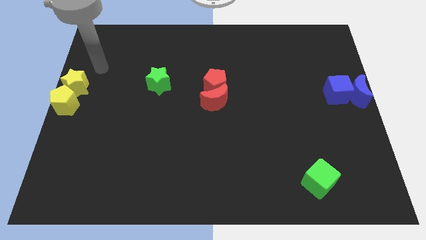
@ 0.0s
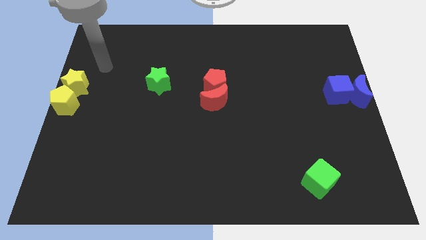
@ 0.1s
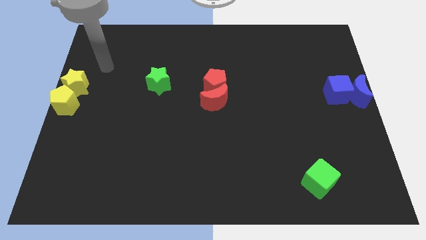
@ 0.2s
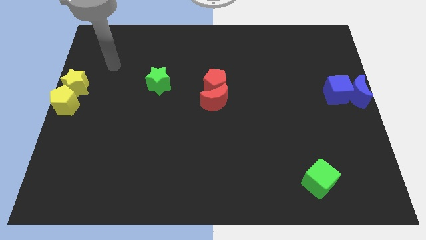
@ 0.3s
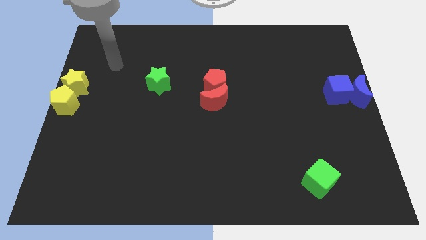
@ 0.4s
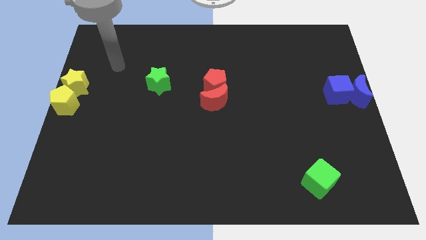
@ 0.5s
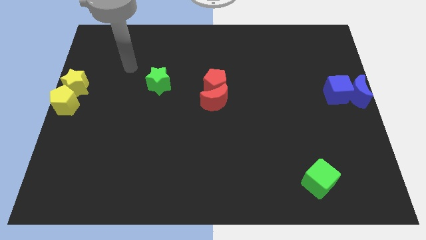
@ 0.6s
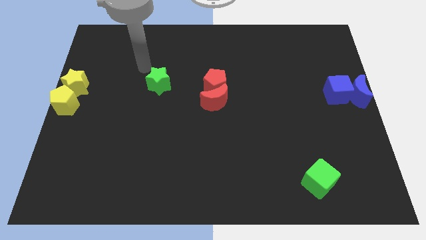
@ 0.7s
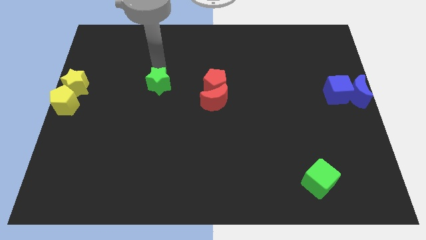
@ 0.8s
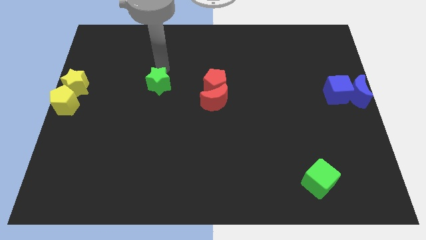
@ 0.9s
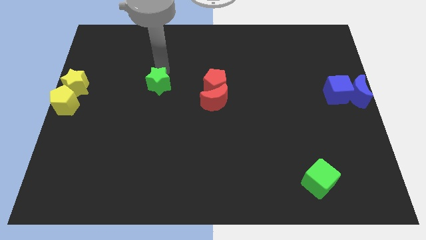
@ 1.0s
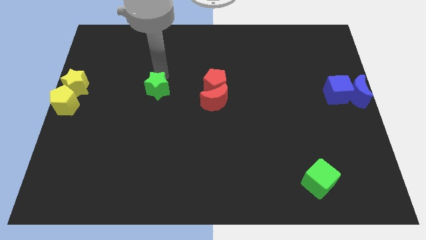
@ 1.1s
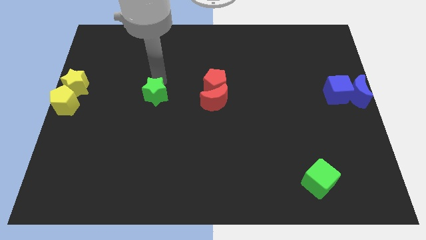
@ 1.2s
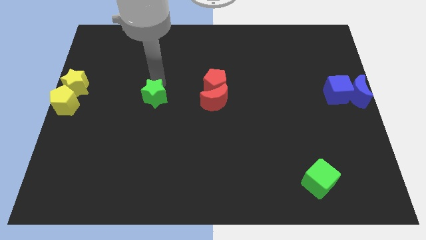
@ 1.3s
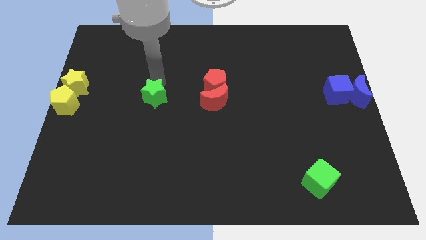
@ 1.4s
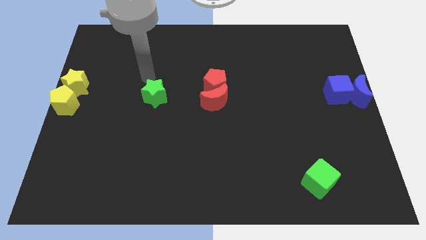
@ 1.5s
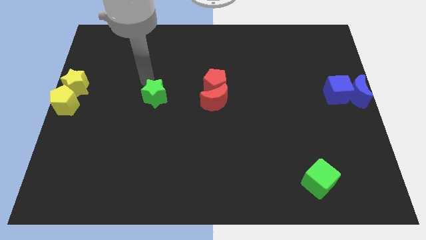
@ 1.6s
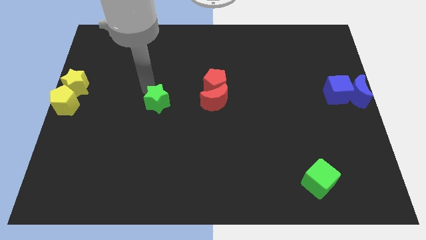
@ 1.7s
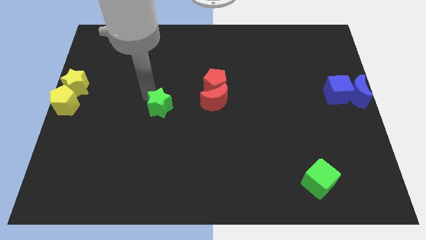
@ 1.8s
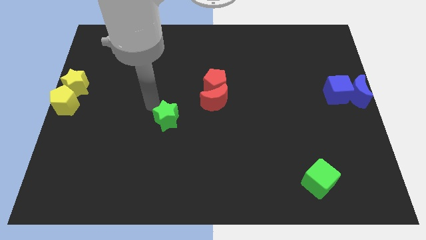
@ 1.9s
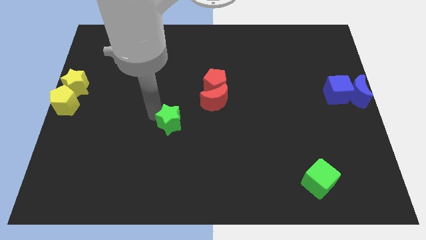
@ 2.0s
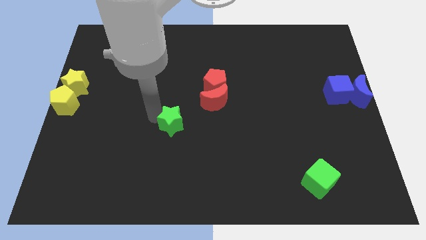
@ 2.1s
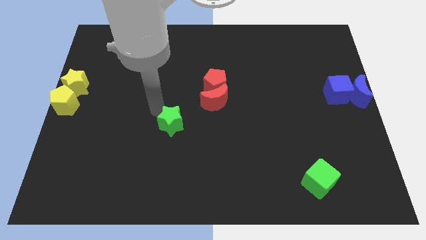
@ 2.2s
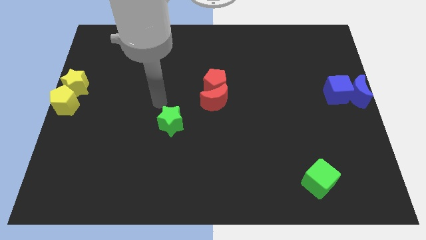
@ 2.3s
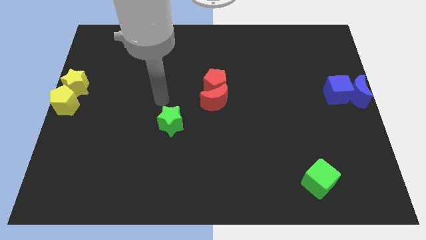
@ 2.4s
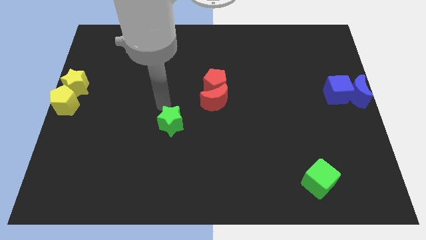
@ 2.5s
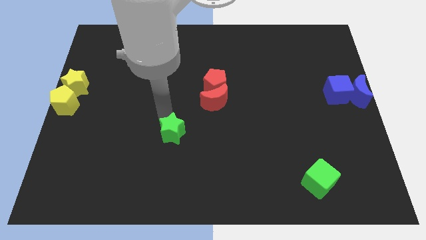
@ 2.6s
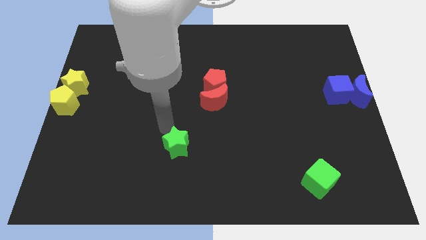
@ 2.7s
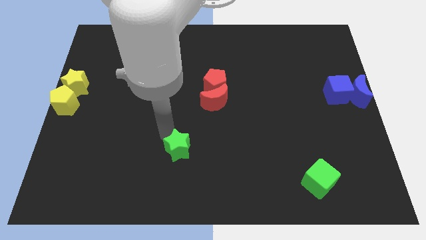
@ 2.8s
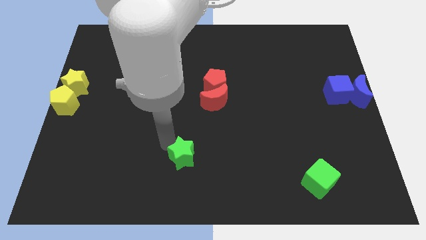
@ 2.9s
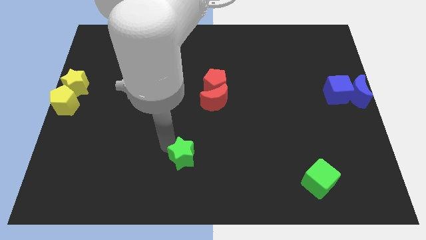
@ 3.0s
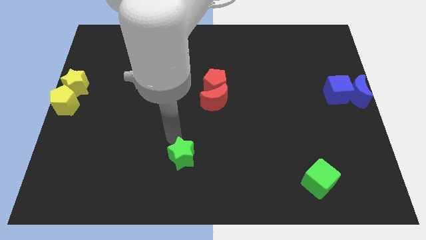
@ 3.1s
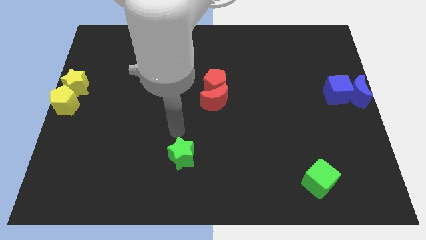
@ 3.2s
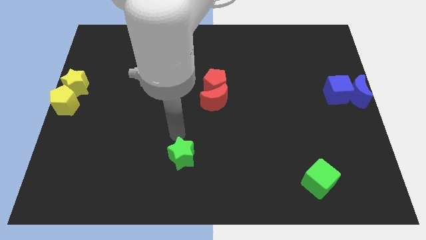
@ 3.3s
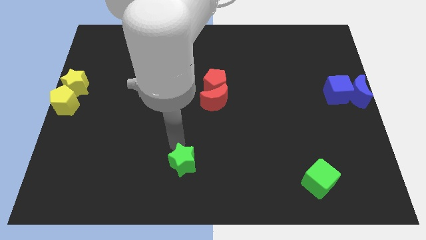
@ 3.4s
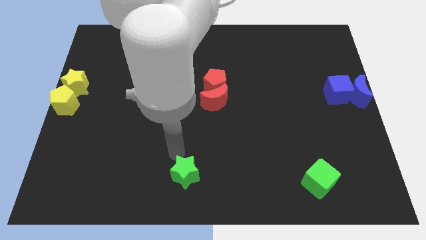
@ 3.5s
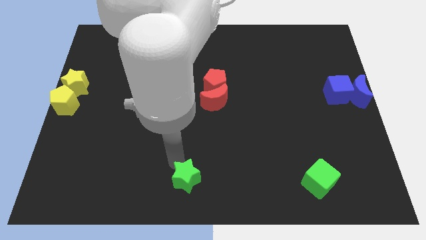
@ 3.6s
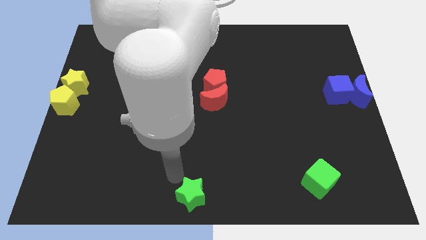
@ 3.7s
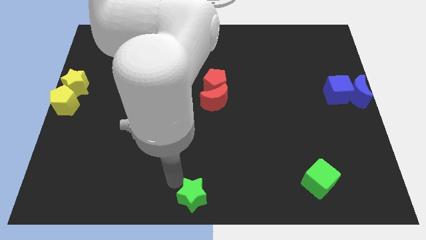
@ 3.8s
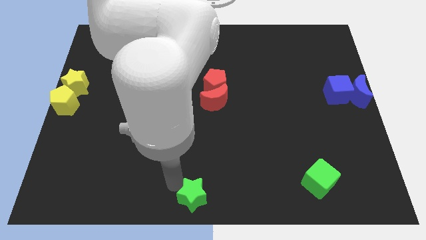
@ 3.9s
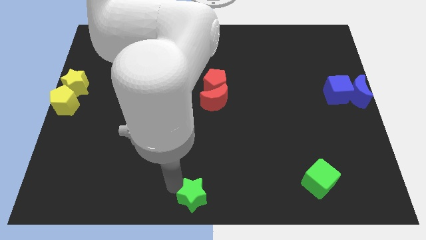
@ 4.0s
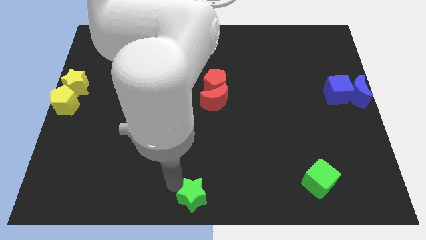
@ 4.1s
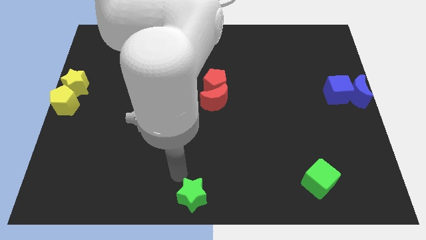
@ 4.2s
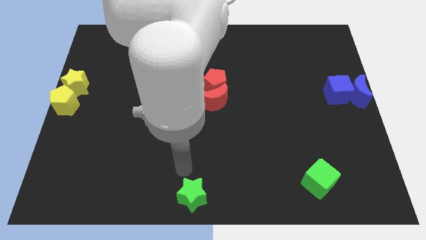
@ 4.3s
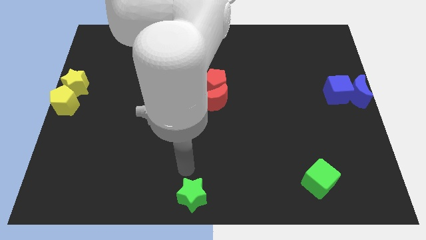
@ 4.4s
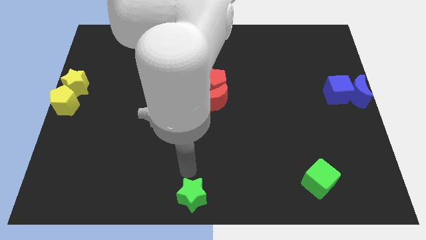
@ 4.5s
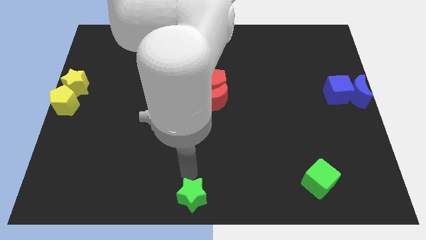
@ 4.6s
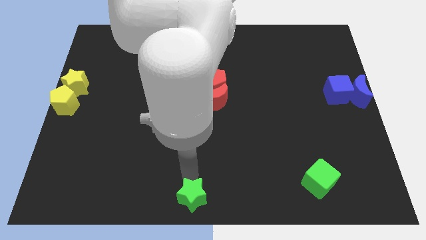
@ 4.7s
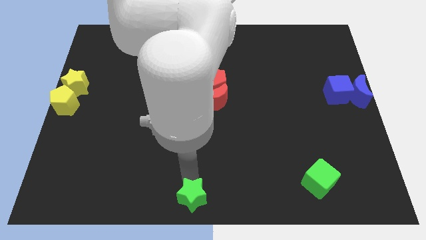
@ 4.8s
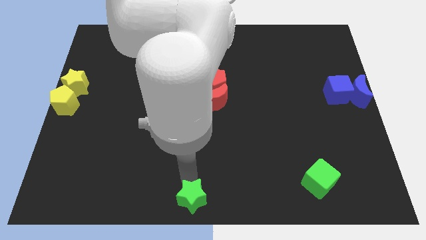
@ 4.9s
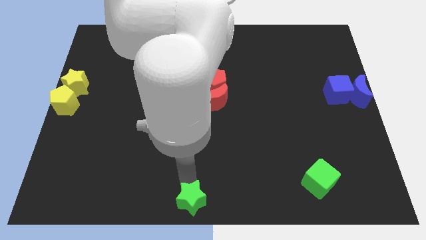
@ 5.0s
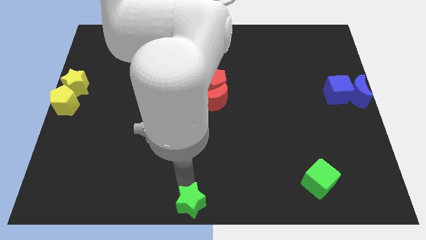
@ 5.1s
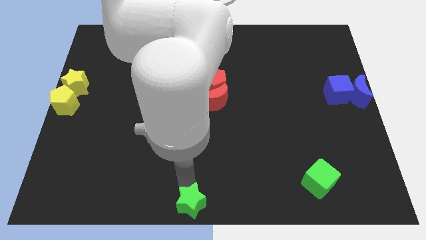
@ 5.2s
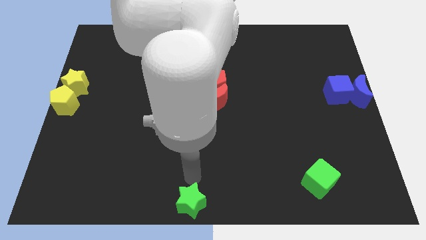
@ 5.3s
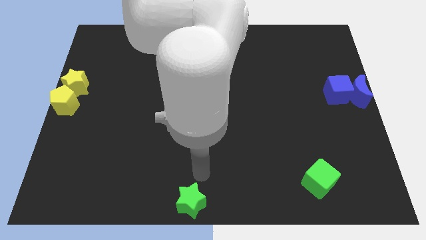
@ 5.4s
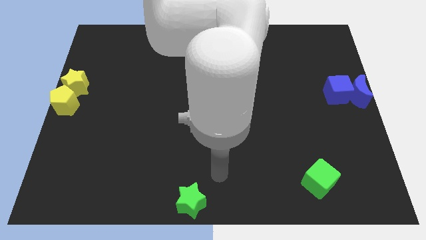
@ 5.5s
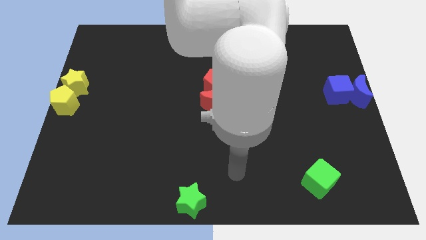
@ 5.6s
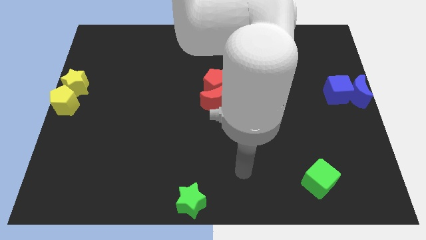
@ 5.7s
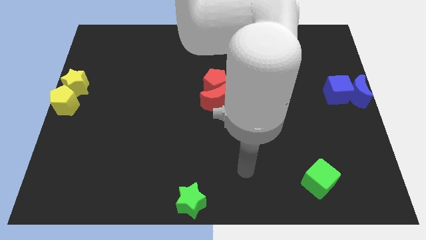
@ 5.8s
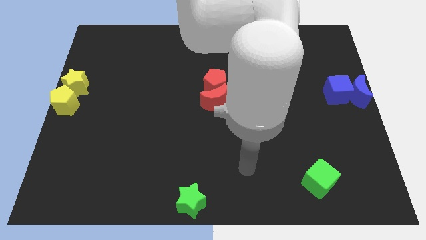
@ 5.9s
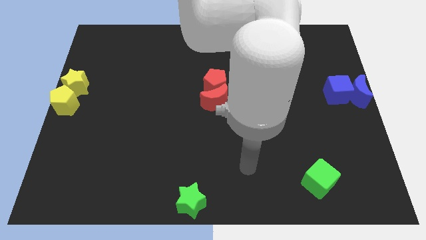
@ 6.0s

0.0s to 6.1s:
place the green star at the bottom center of the board

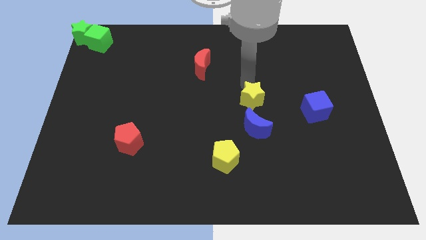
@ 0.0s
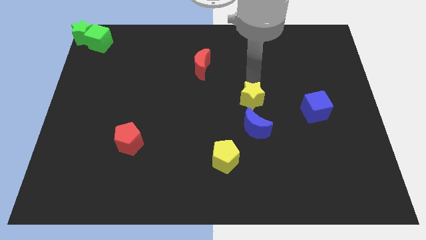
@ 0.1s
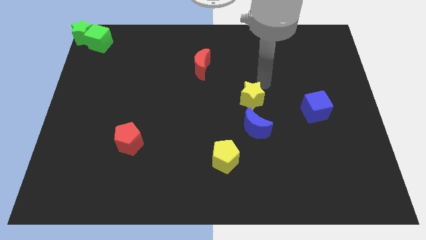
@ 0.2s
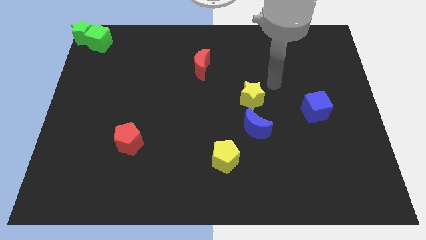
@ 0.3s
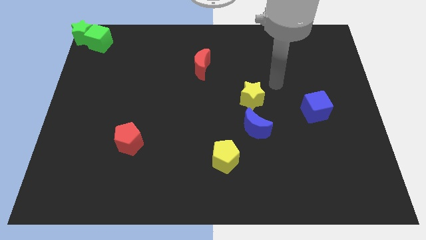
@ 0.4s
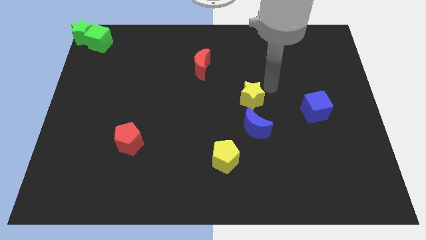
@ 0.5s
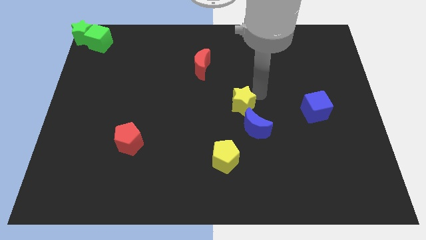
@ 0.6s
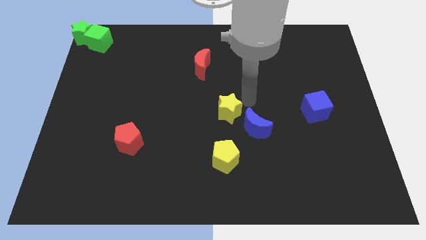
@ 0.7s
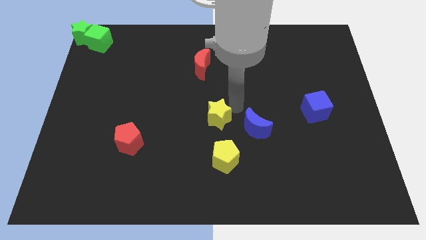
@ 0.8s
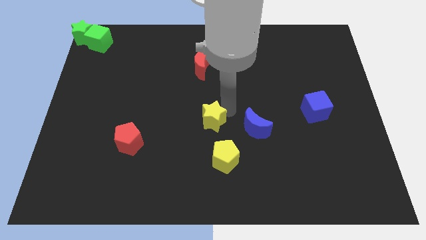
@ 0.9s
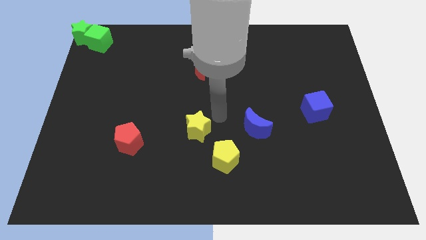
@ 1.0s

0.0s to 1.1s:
move the yellow star to the left side of the blue moon

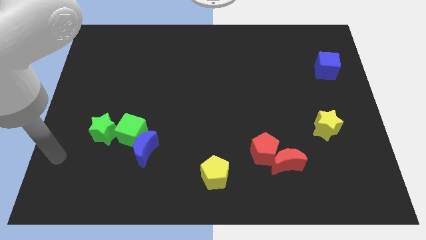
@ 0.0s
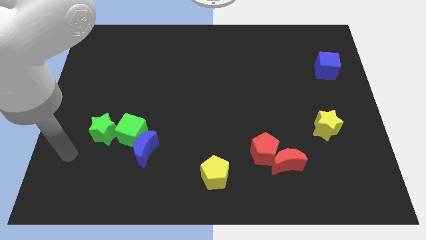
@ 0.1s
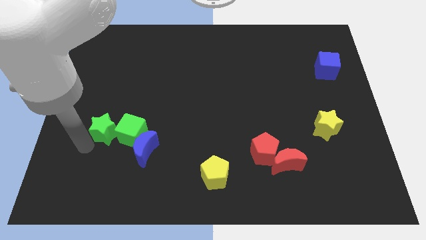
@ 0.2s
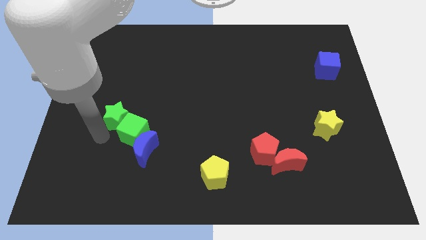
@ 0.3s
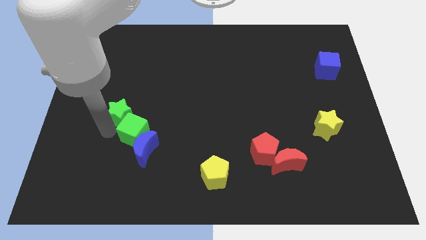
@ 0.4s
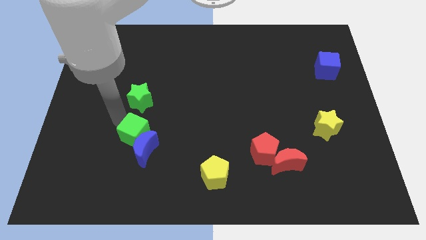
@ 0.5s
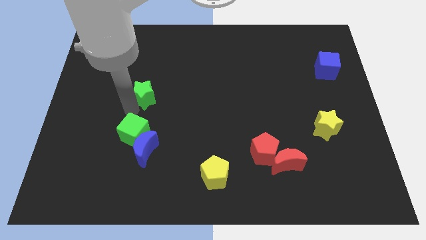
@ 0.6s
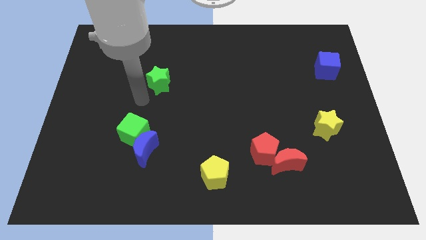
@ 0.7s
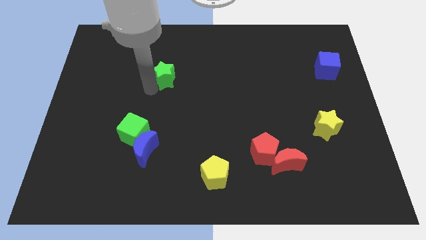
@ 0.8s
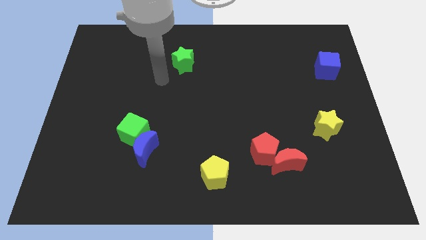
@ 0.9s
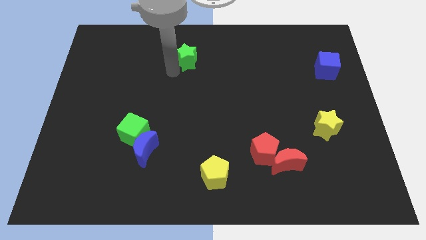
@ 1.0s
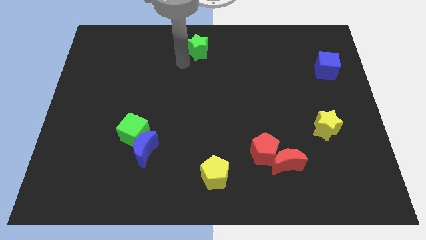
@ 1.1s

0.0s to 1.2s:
push the green star to the center

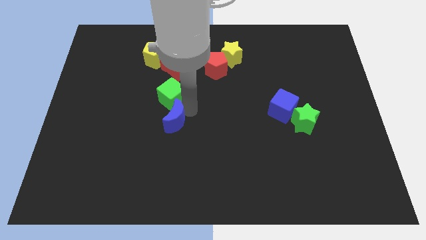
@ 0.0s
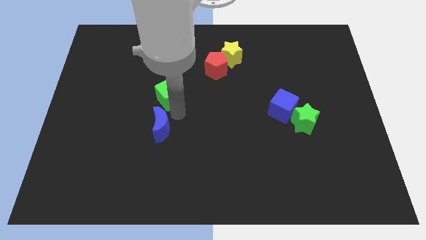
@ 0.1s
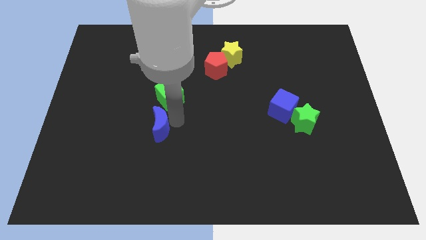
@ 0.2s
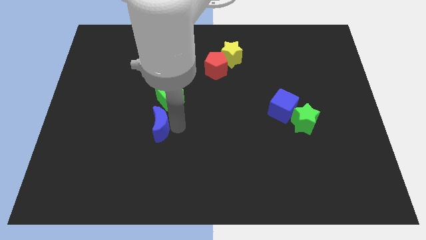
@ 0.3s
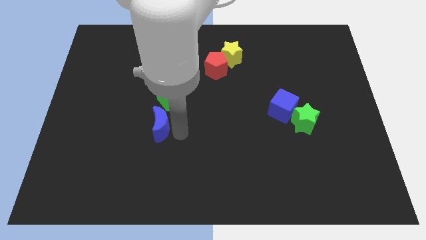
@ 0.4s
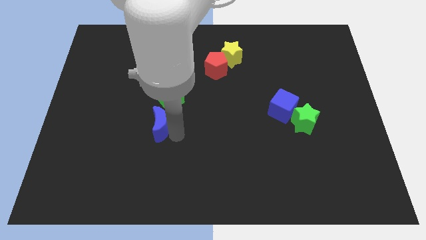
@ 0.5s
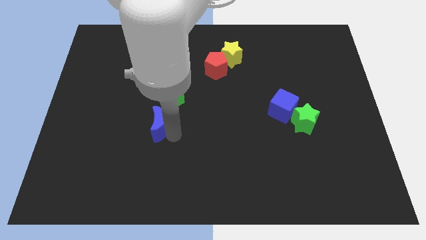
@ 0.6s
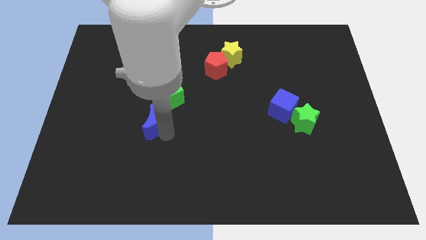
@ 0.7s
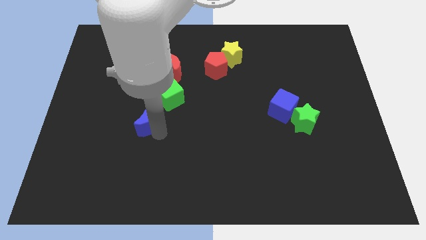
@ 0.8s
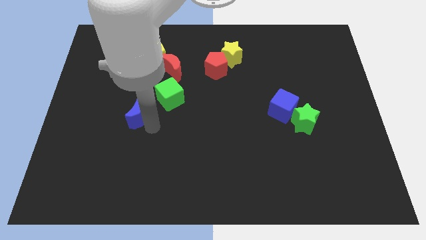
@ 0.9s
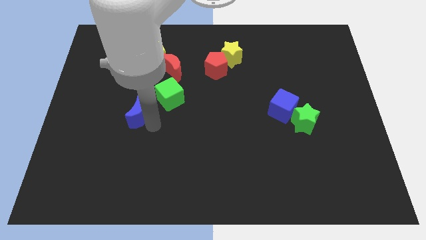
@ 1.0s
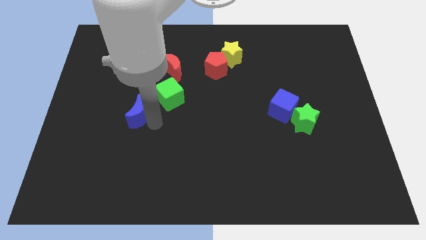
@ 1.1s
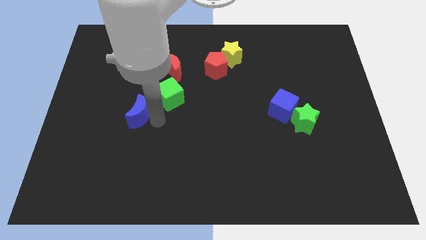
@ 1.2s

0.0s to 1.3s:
place the blue crescent to the left of the green cube
